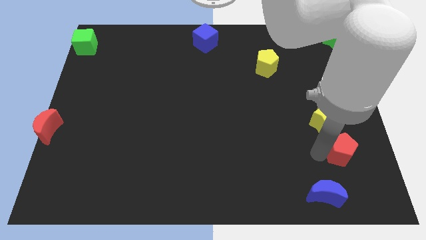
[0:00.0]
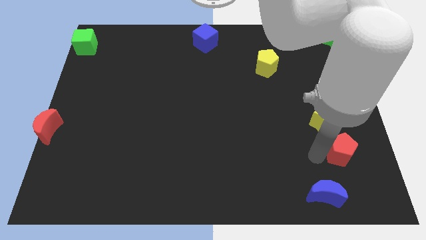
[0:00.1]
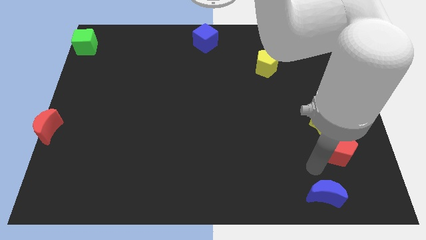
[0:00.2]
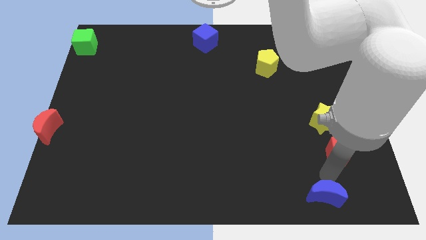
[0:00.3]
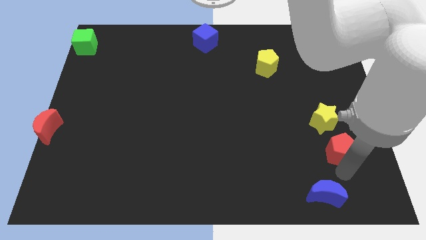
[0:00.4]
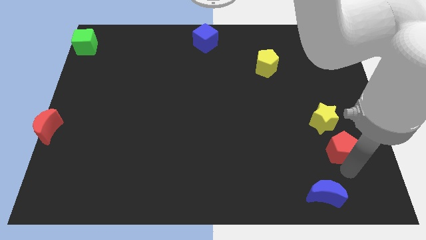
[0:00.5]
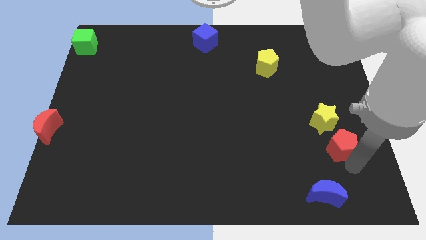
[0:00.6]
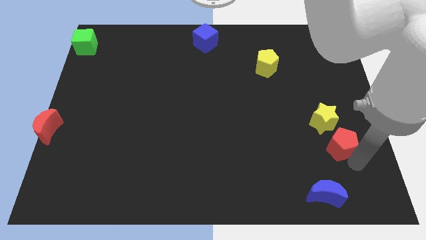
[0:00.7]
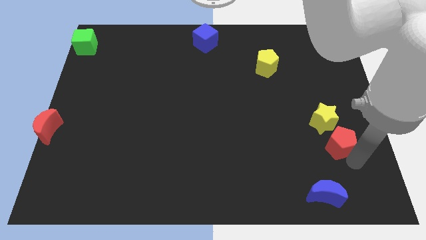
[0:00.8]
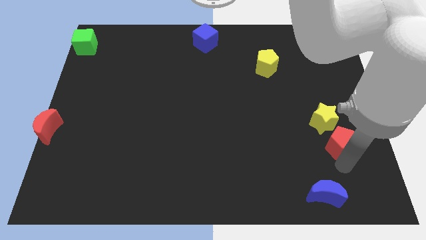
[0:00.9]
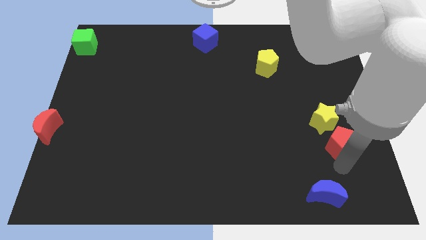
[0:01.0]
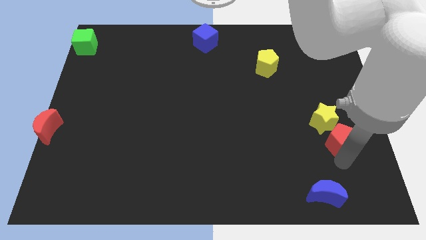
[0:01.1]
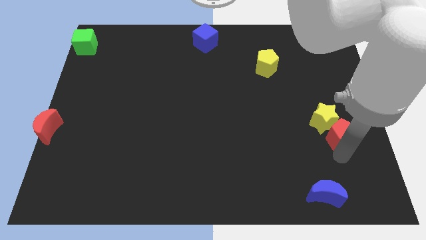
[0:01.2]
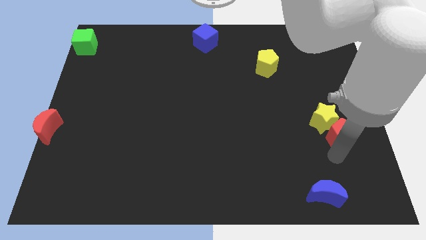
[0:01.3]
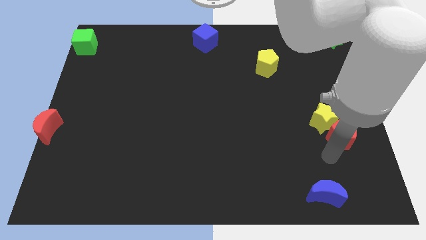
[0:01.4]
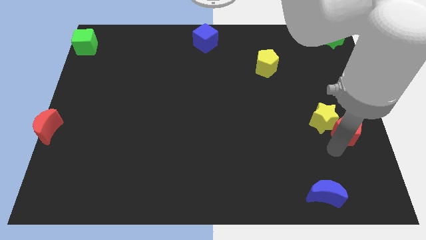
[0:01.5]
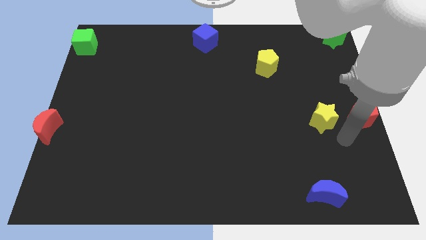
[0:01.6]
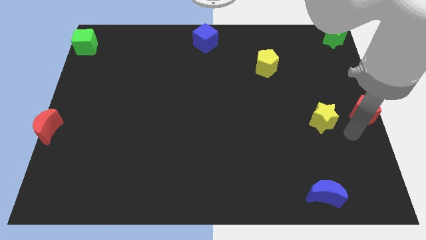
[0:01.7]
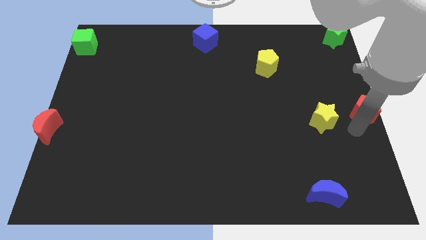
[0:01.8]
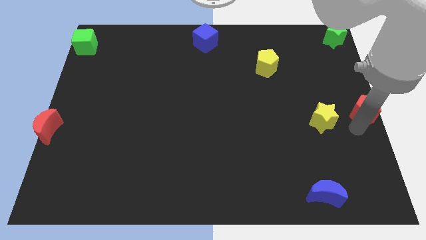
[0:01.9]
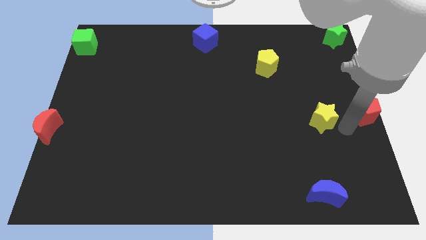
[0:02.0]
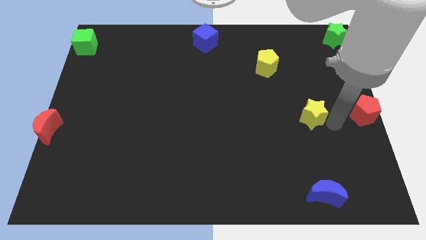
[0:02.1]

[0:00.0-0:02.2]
place red pentagon to the right center of the board

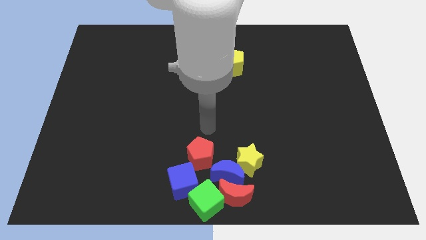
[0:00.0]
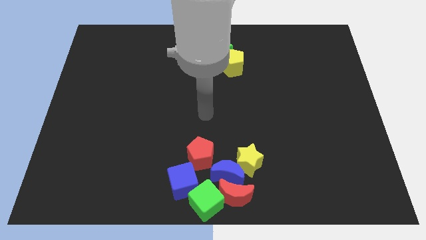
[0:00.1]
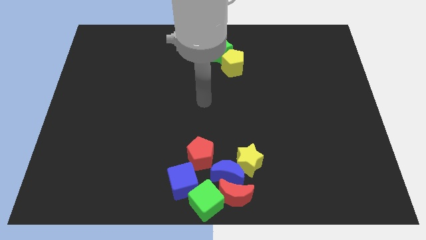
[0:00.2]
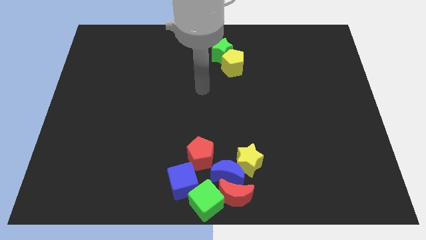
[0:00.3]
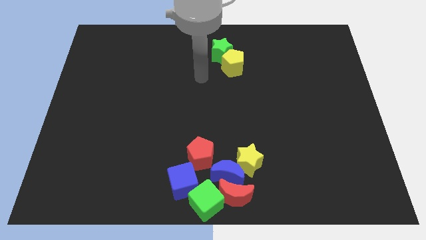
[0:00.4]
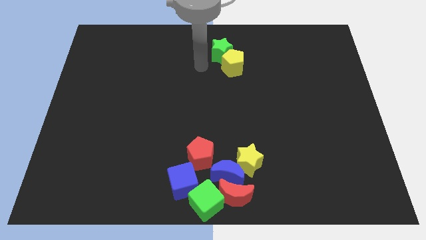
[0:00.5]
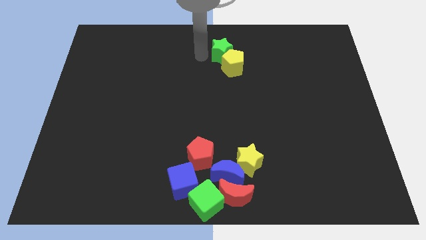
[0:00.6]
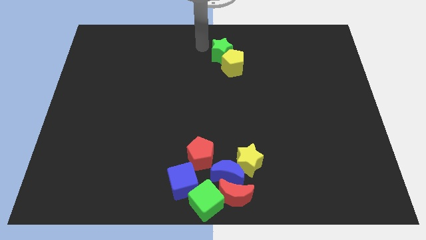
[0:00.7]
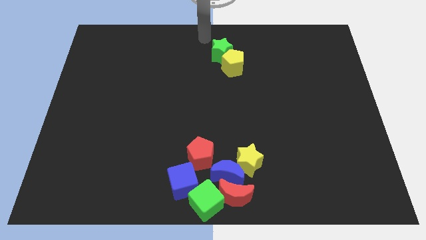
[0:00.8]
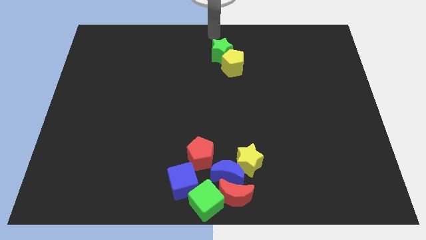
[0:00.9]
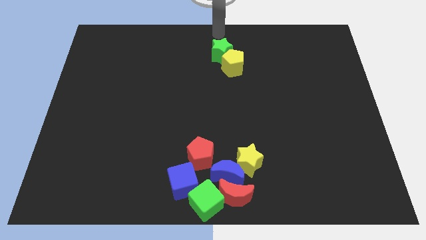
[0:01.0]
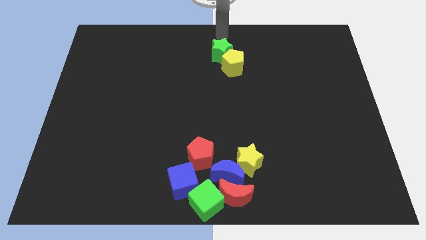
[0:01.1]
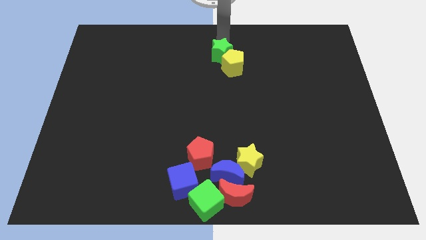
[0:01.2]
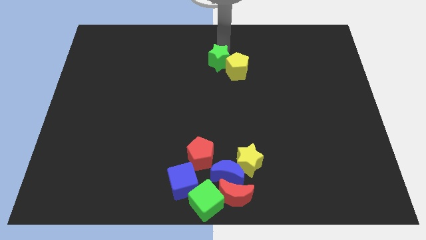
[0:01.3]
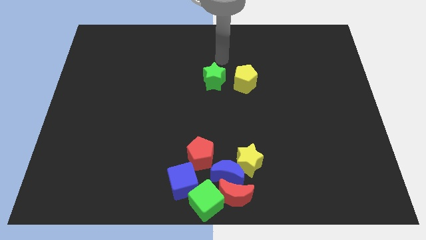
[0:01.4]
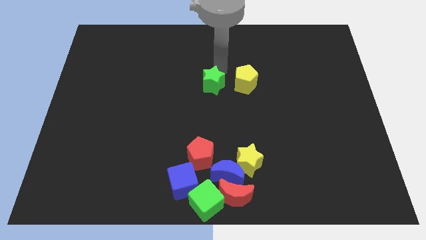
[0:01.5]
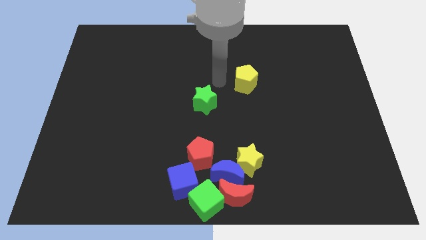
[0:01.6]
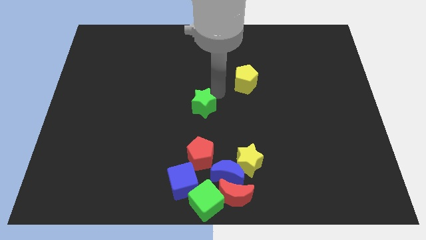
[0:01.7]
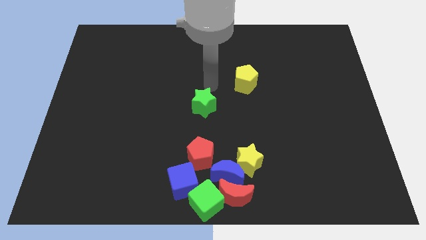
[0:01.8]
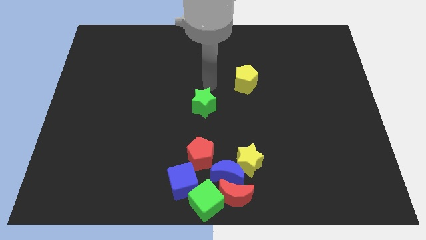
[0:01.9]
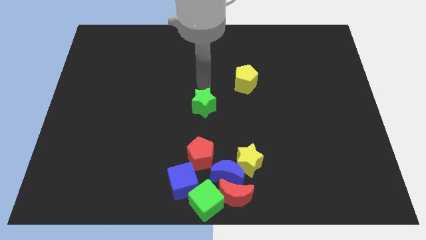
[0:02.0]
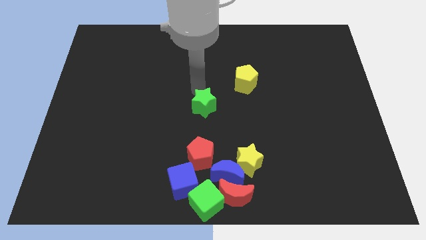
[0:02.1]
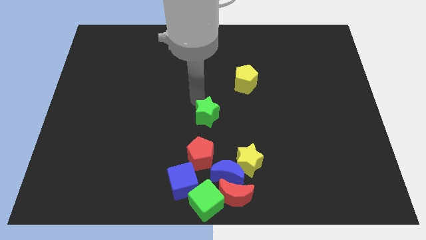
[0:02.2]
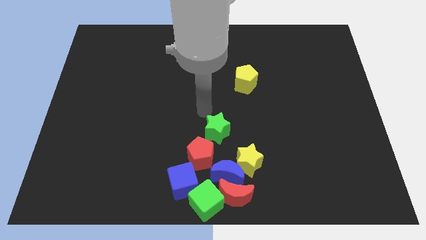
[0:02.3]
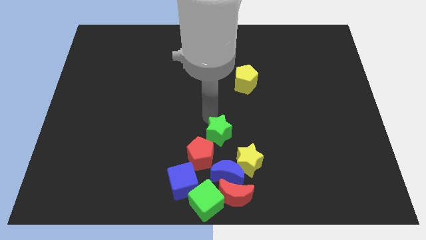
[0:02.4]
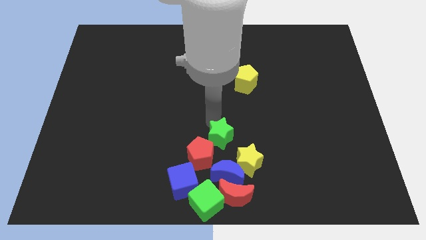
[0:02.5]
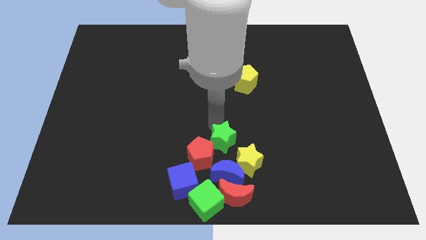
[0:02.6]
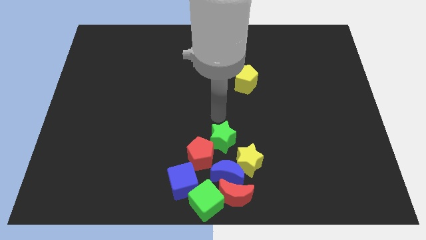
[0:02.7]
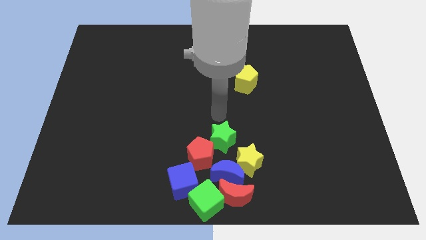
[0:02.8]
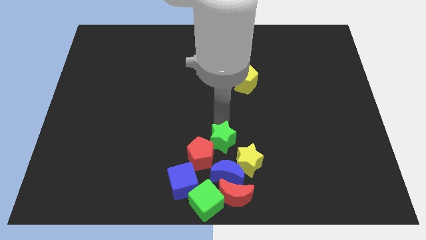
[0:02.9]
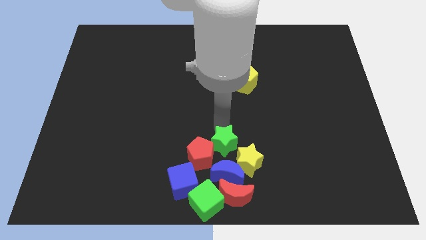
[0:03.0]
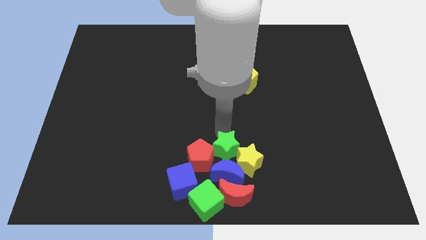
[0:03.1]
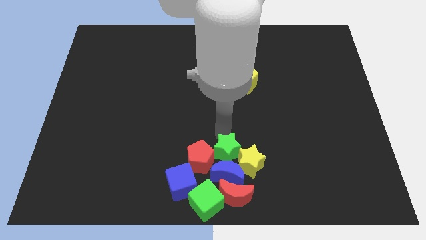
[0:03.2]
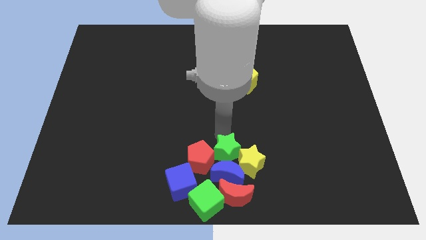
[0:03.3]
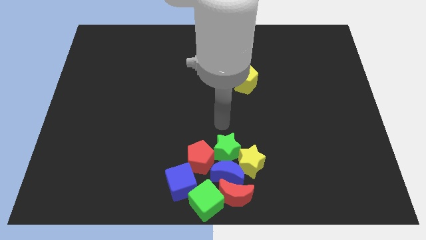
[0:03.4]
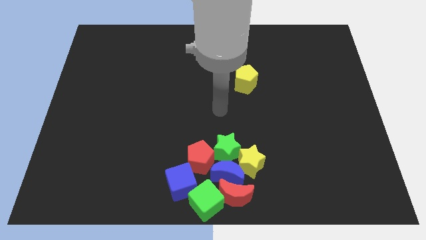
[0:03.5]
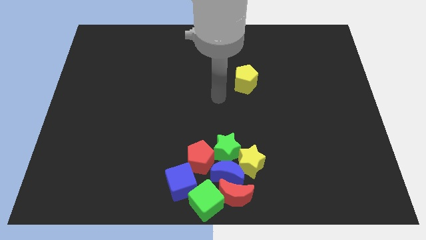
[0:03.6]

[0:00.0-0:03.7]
push the green star towards the bottom center of the board

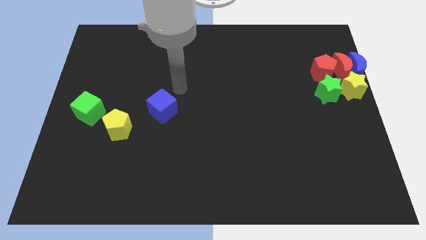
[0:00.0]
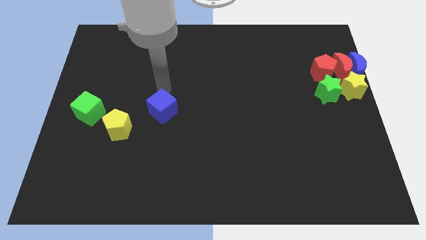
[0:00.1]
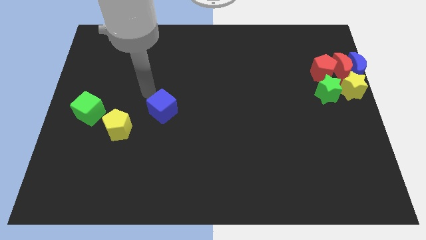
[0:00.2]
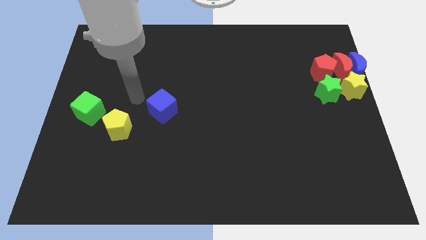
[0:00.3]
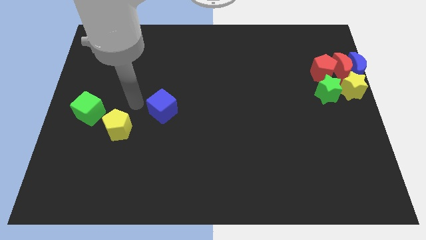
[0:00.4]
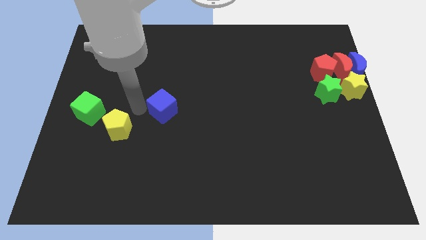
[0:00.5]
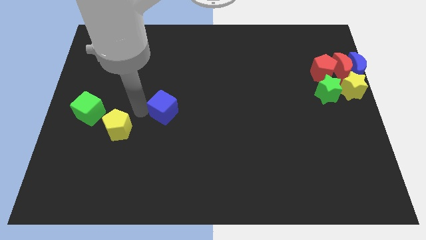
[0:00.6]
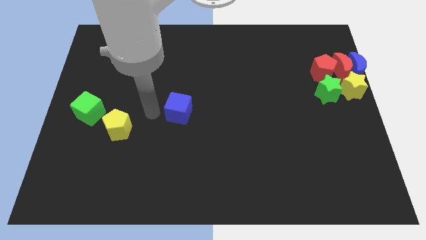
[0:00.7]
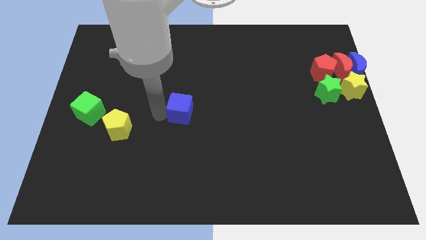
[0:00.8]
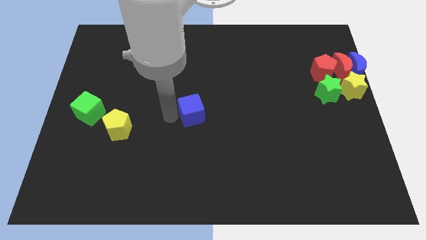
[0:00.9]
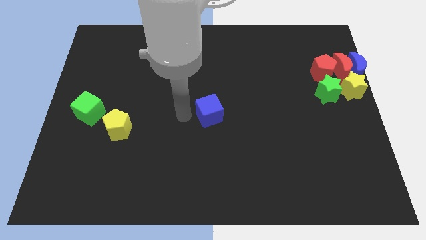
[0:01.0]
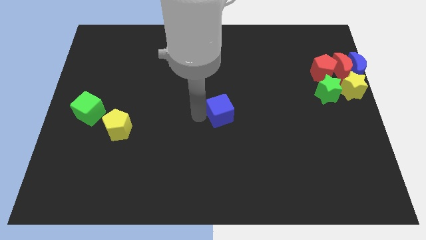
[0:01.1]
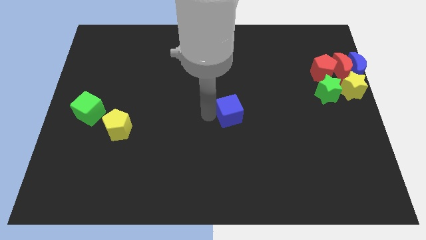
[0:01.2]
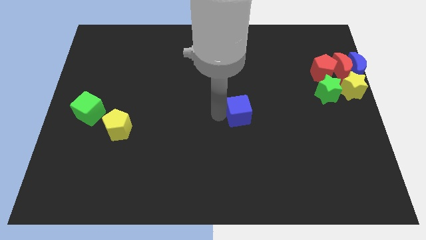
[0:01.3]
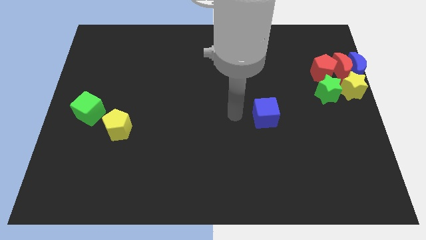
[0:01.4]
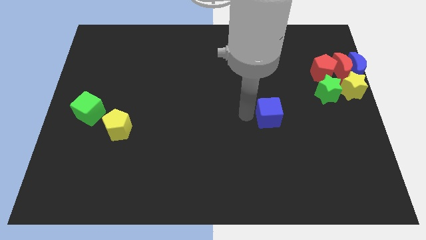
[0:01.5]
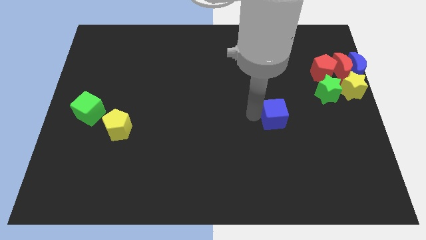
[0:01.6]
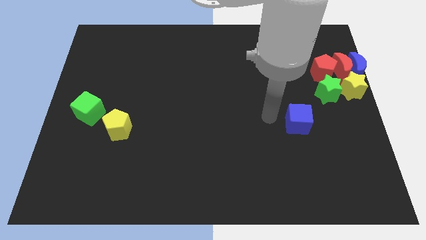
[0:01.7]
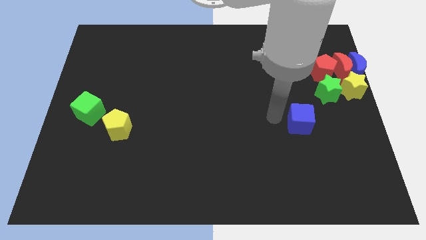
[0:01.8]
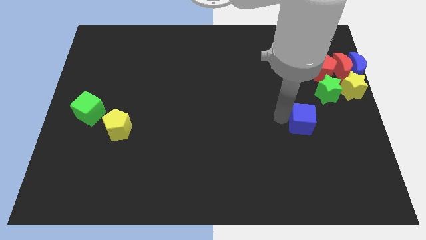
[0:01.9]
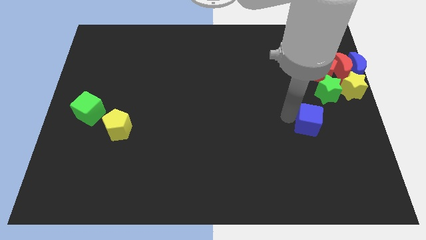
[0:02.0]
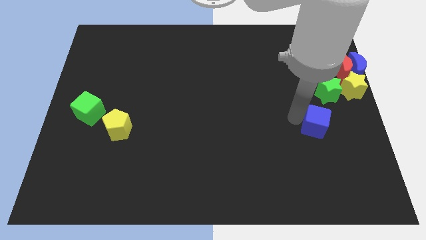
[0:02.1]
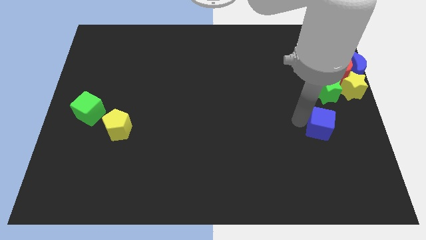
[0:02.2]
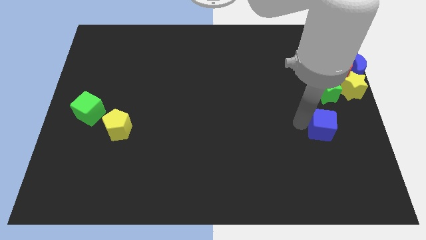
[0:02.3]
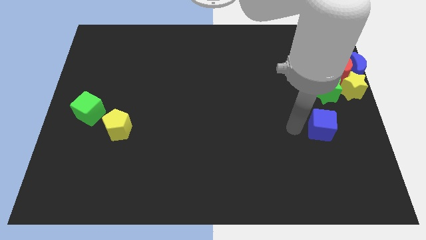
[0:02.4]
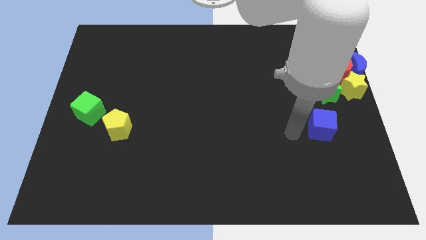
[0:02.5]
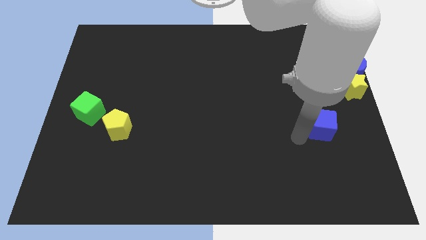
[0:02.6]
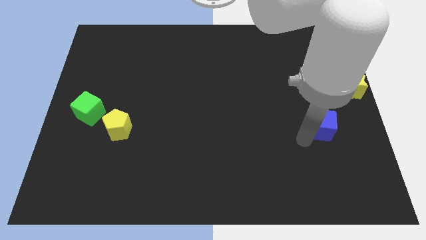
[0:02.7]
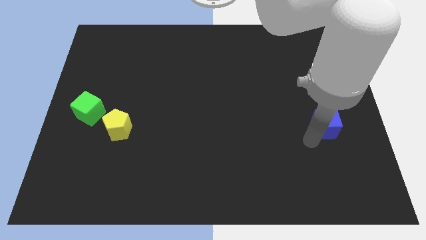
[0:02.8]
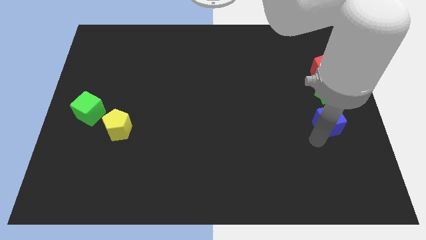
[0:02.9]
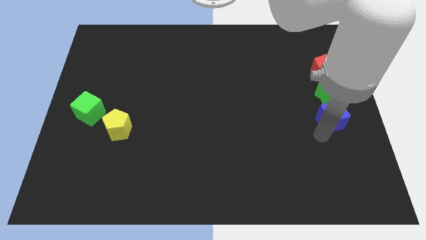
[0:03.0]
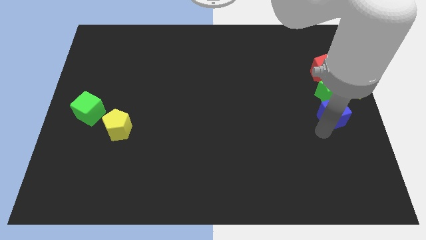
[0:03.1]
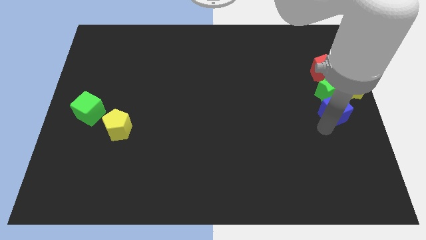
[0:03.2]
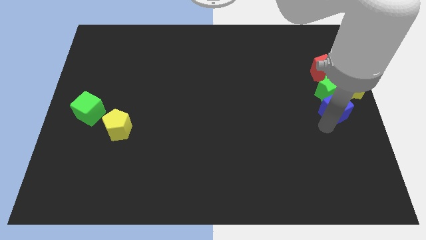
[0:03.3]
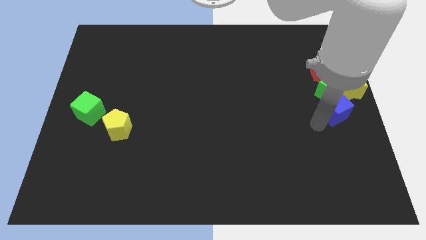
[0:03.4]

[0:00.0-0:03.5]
put the blue cube at the bottom of the green star
